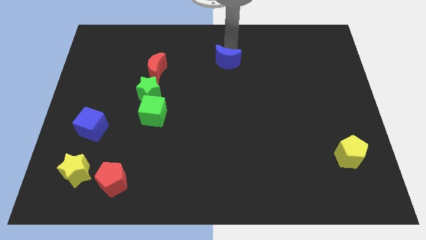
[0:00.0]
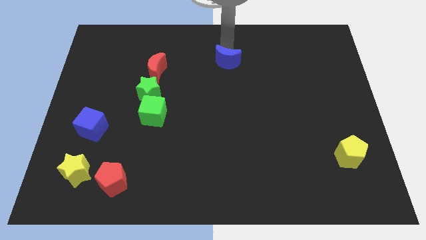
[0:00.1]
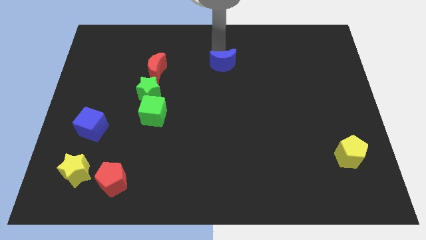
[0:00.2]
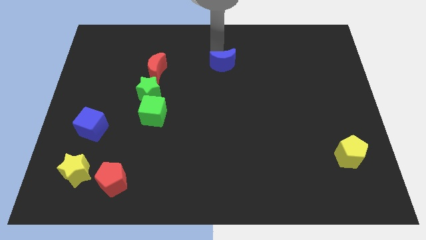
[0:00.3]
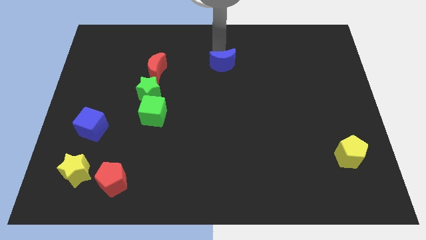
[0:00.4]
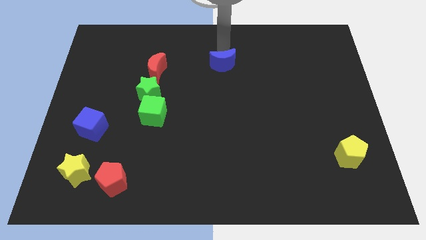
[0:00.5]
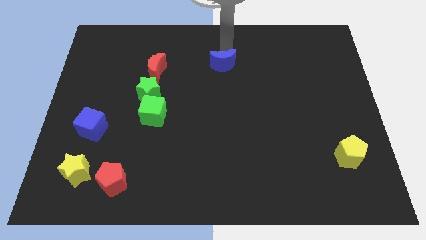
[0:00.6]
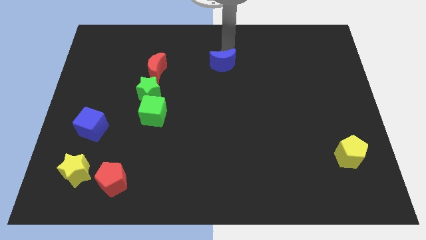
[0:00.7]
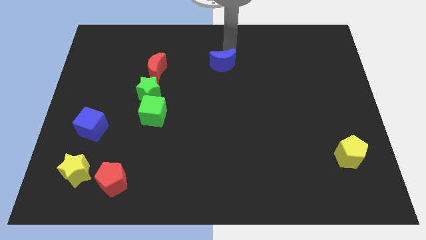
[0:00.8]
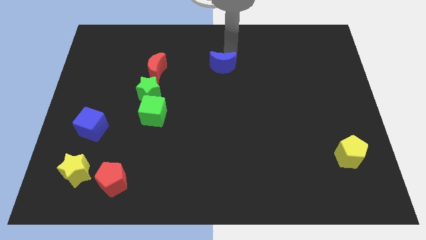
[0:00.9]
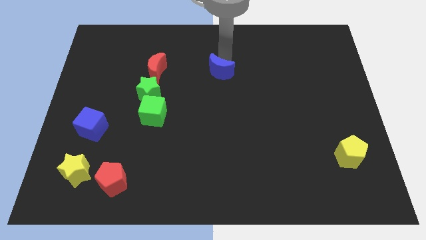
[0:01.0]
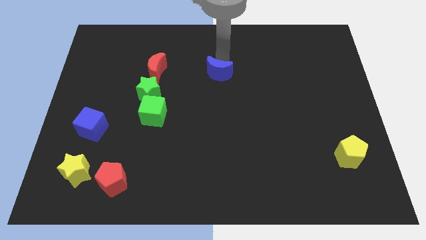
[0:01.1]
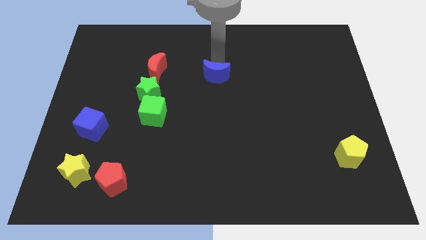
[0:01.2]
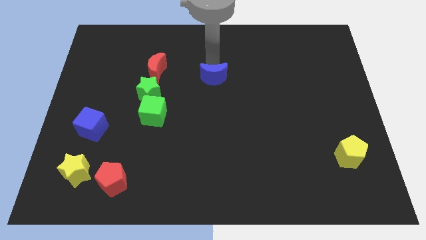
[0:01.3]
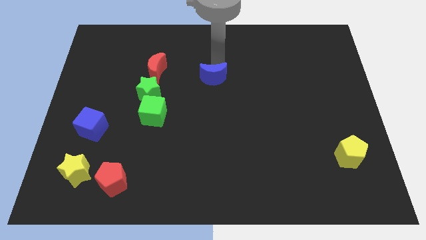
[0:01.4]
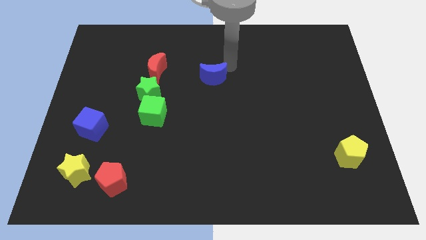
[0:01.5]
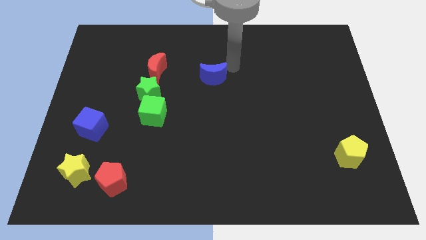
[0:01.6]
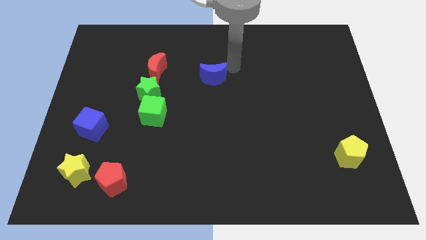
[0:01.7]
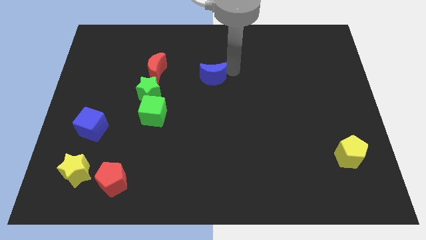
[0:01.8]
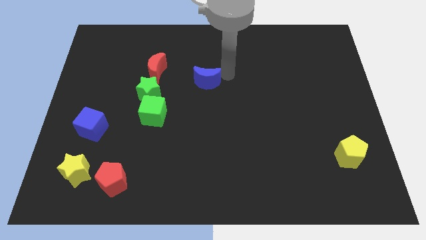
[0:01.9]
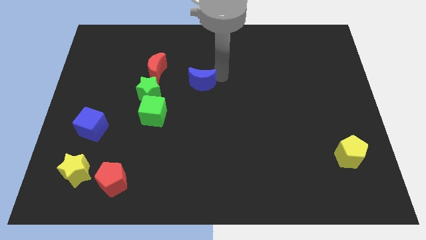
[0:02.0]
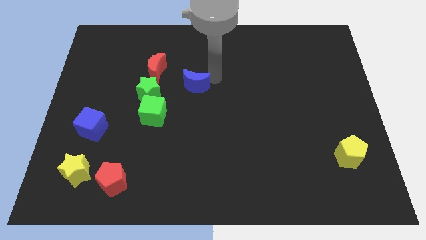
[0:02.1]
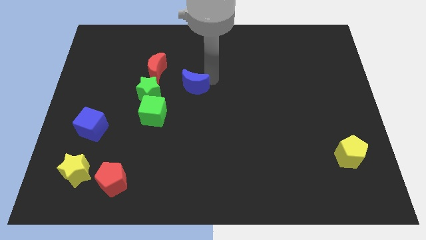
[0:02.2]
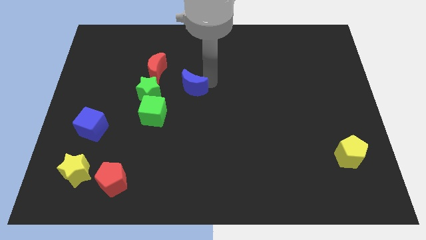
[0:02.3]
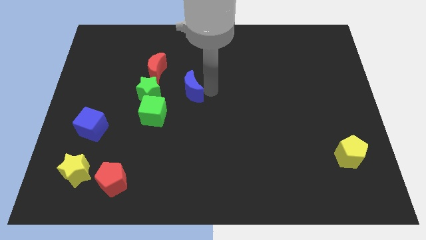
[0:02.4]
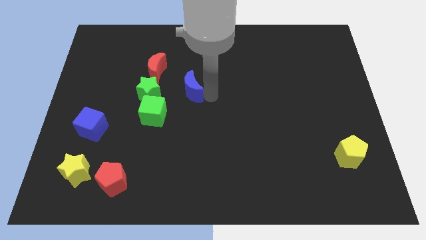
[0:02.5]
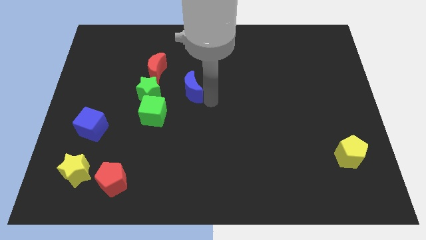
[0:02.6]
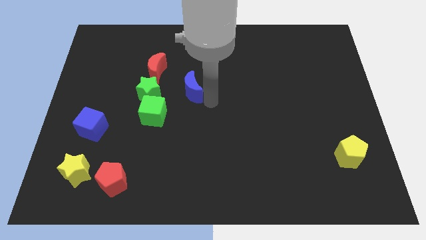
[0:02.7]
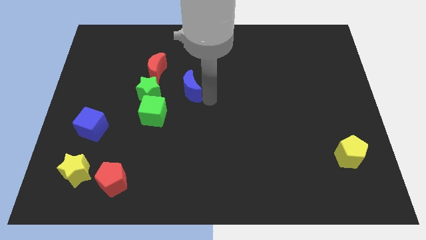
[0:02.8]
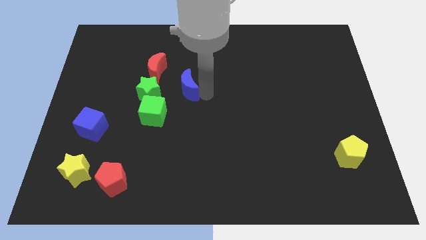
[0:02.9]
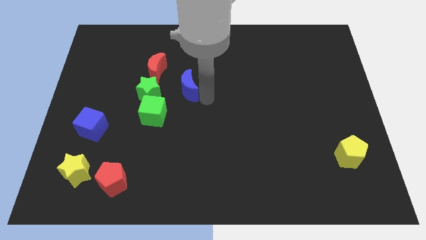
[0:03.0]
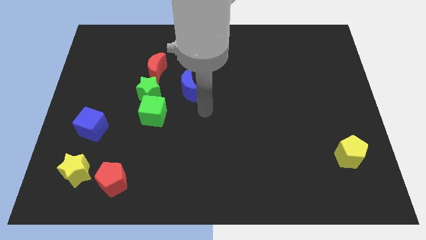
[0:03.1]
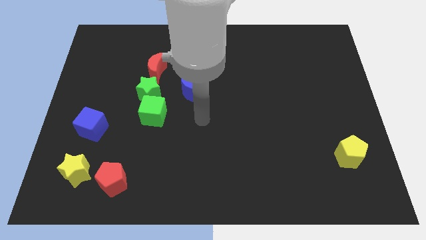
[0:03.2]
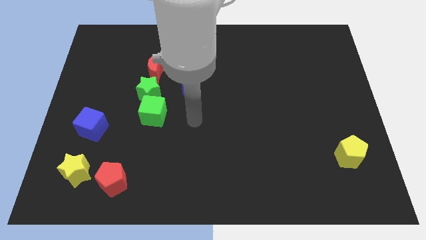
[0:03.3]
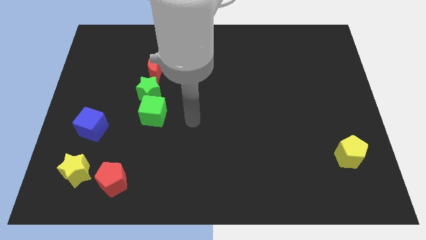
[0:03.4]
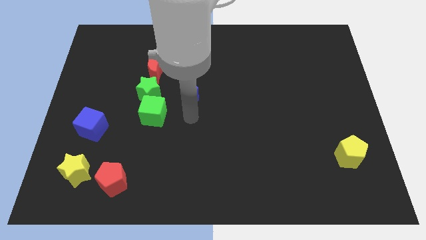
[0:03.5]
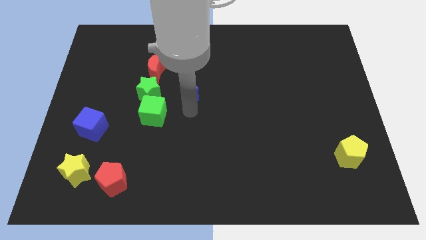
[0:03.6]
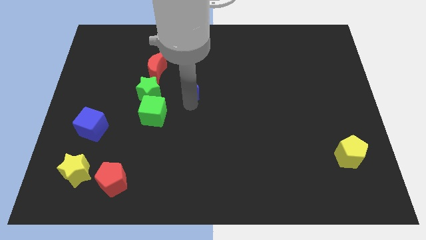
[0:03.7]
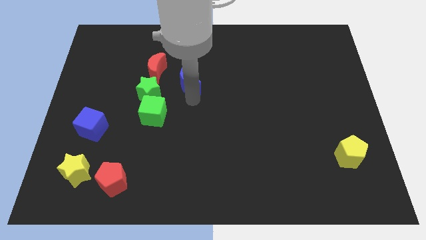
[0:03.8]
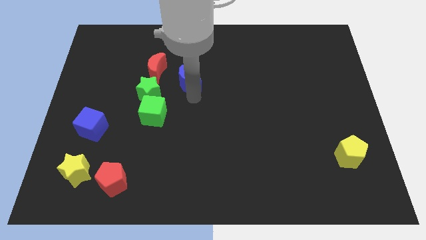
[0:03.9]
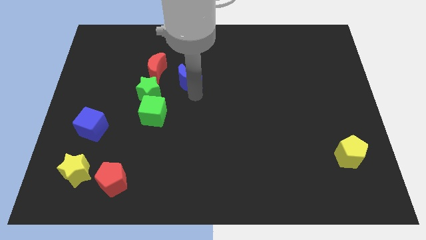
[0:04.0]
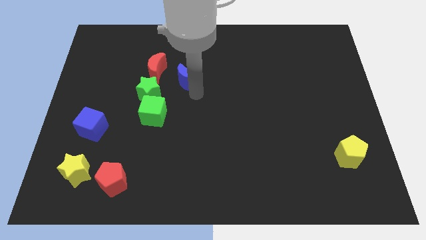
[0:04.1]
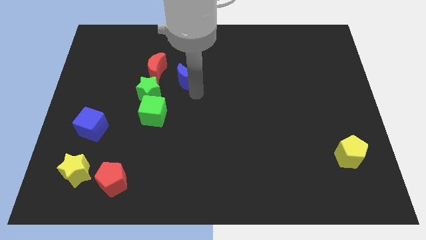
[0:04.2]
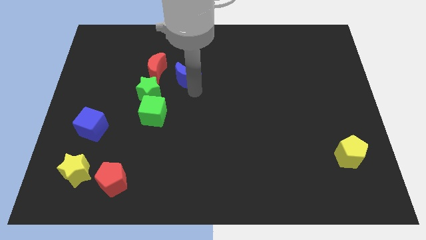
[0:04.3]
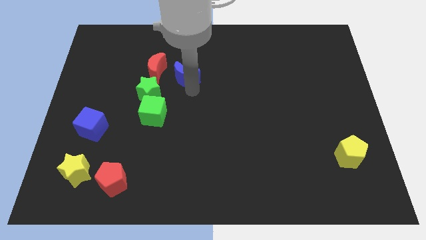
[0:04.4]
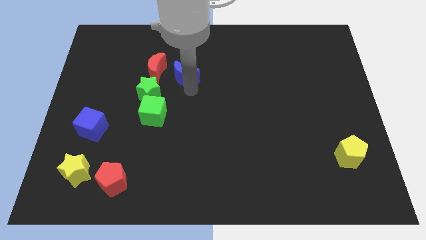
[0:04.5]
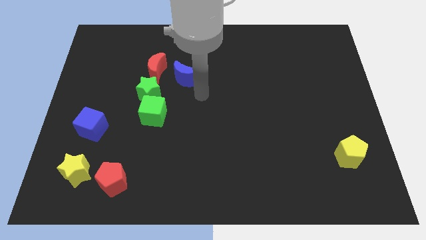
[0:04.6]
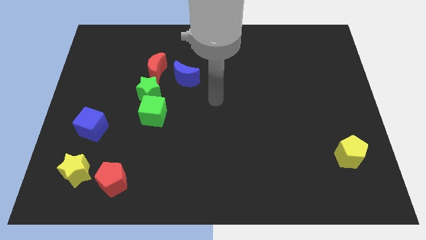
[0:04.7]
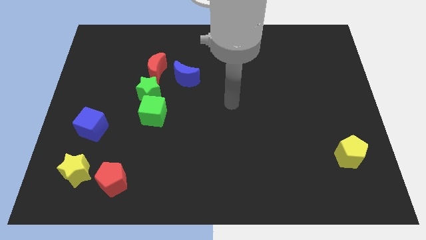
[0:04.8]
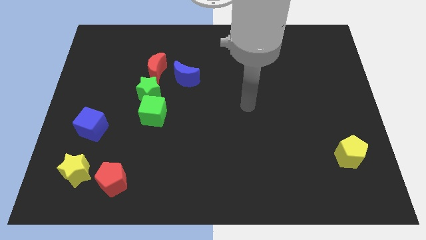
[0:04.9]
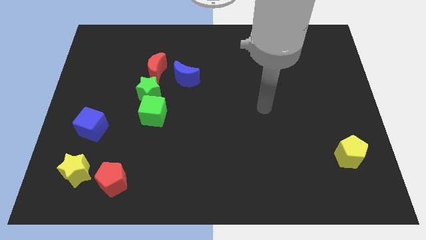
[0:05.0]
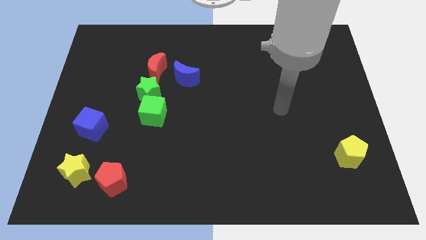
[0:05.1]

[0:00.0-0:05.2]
push blue crescent towards red moon

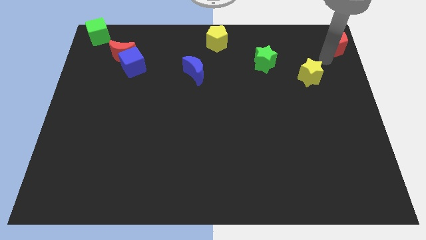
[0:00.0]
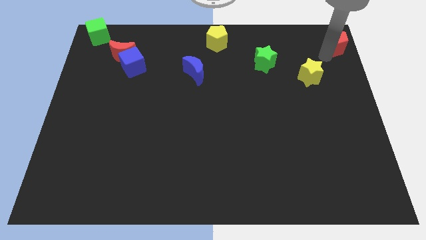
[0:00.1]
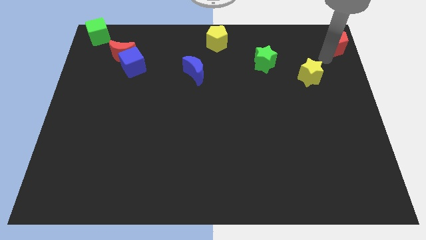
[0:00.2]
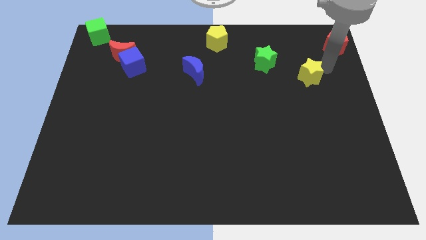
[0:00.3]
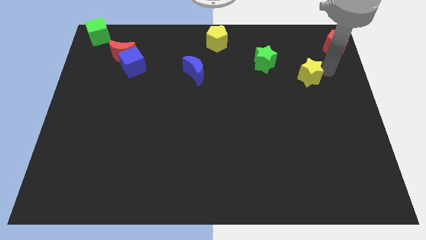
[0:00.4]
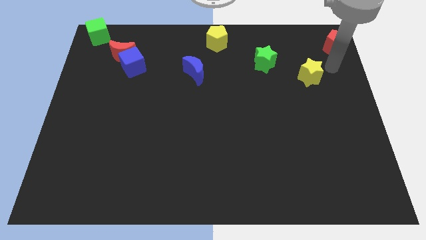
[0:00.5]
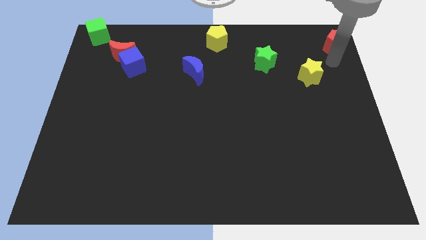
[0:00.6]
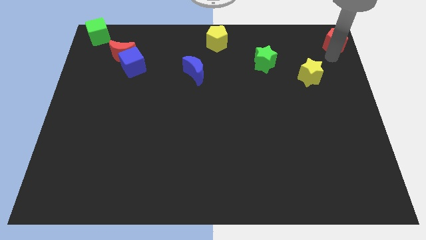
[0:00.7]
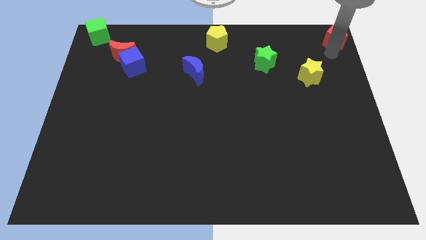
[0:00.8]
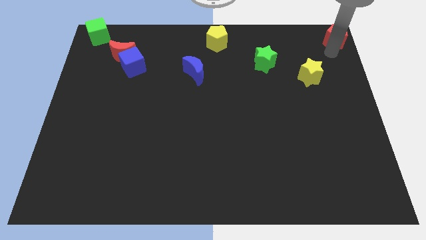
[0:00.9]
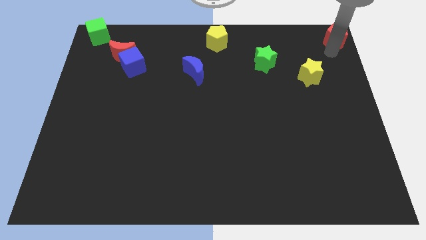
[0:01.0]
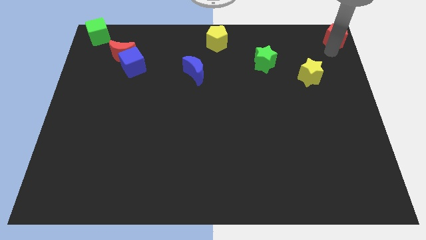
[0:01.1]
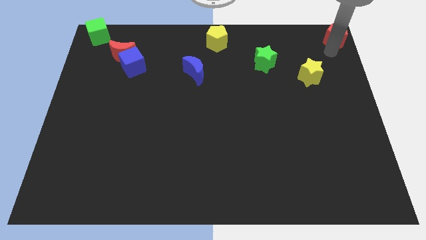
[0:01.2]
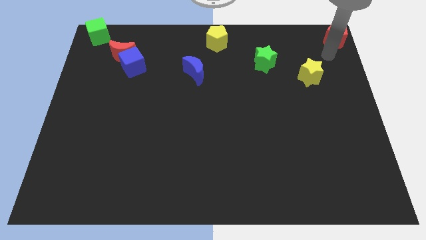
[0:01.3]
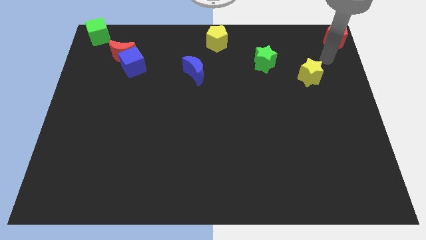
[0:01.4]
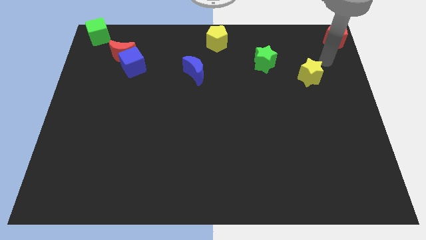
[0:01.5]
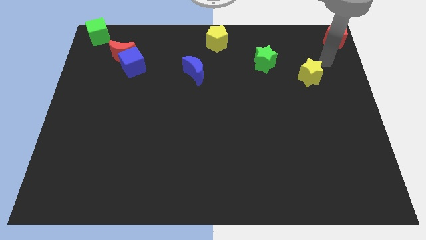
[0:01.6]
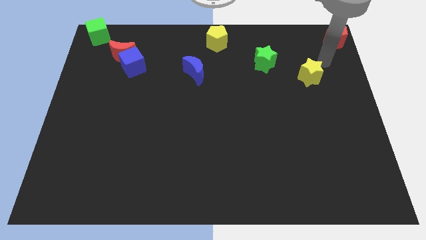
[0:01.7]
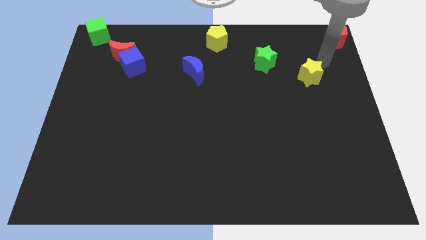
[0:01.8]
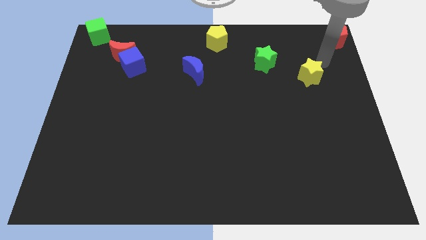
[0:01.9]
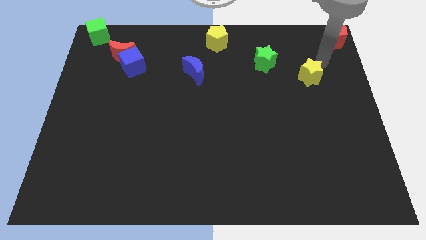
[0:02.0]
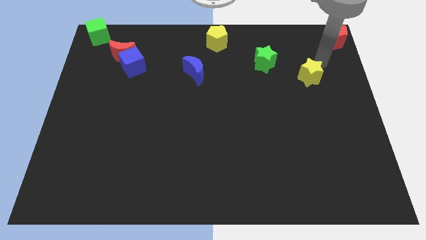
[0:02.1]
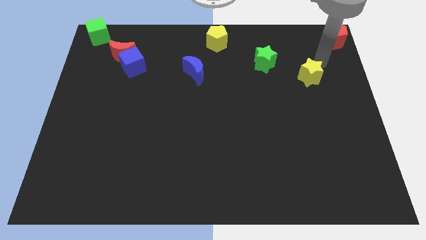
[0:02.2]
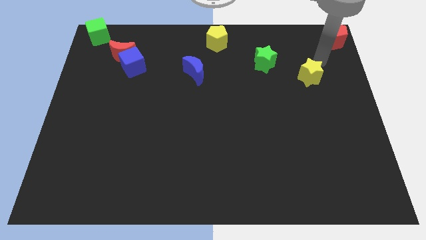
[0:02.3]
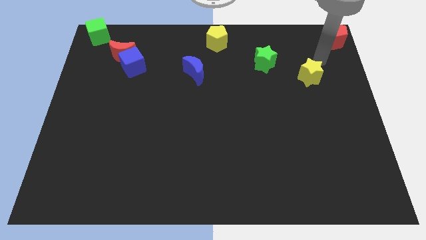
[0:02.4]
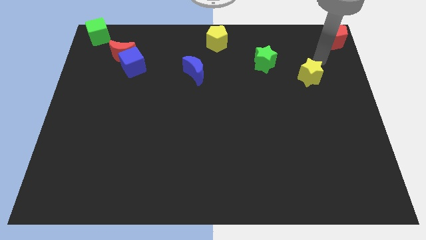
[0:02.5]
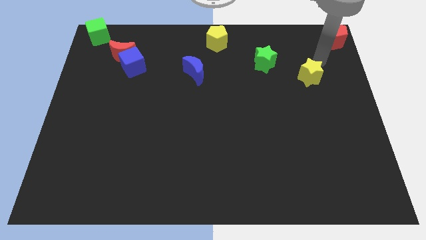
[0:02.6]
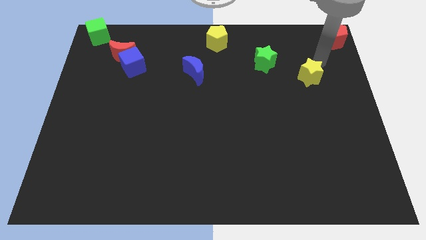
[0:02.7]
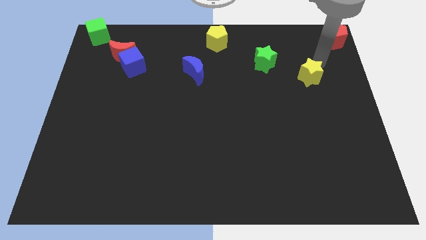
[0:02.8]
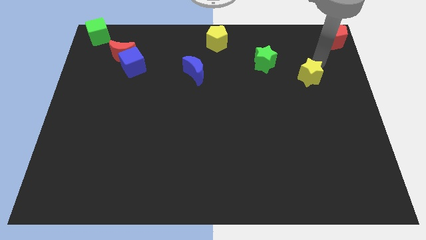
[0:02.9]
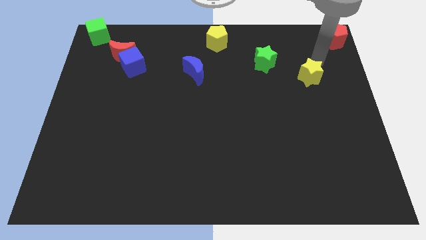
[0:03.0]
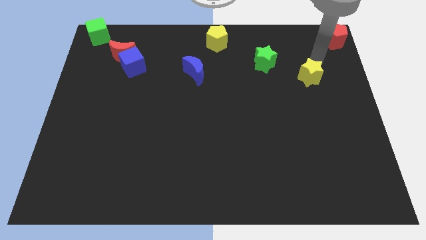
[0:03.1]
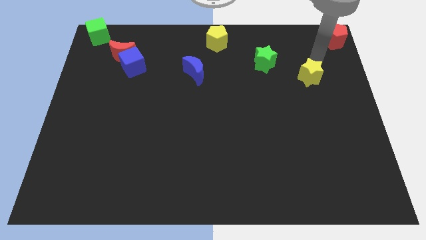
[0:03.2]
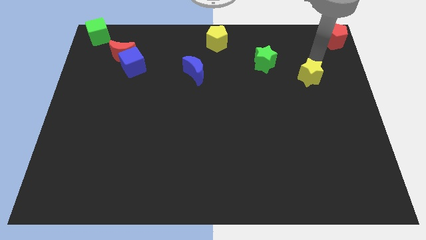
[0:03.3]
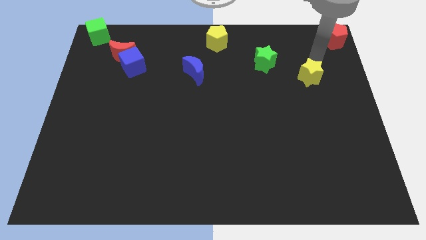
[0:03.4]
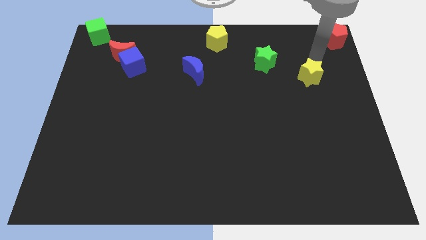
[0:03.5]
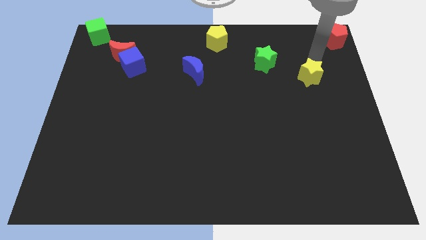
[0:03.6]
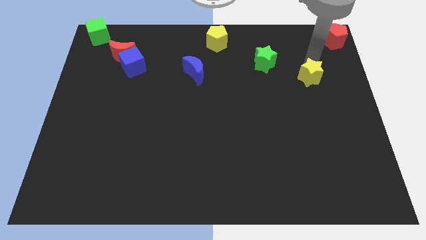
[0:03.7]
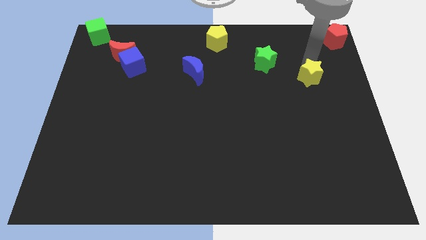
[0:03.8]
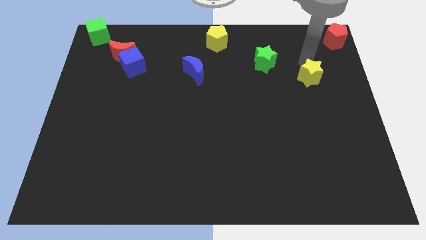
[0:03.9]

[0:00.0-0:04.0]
place the red pentagon top right corner of the board
